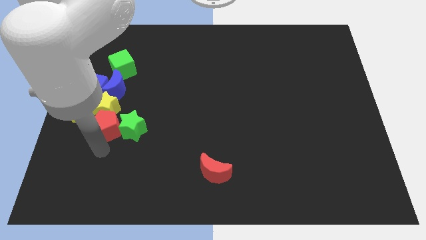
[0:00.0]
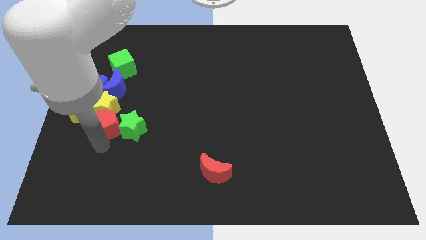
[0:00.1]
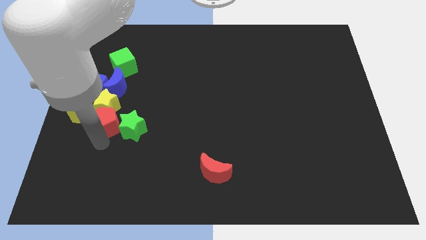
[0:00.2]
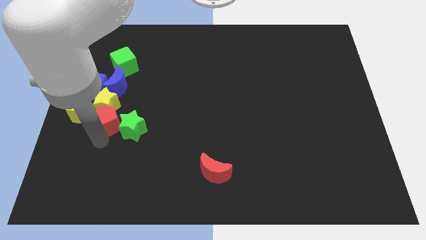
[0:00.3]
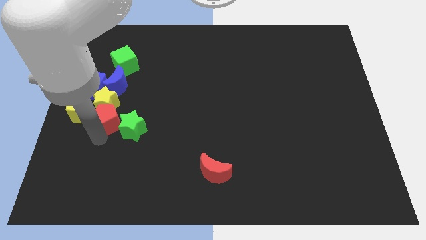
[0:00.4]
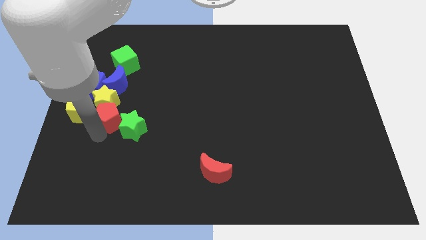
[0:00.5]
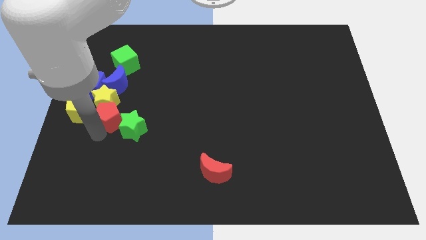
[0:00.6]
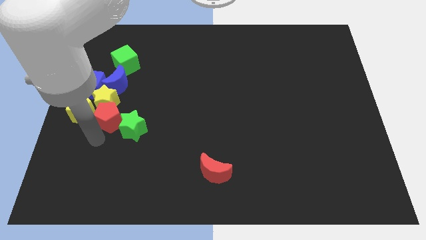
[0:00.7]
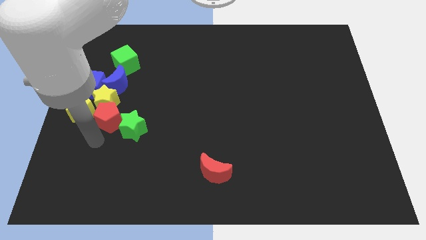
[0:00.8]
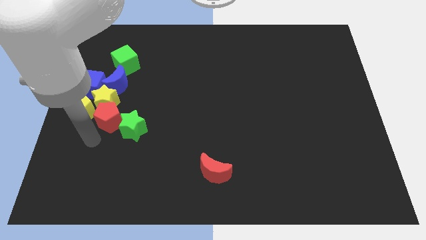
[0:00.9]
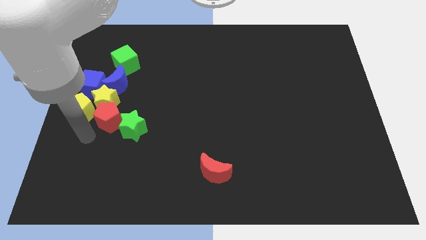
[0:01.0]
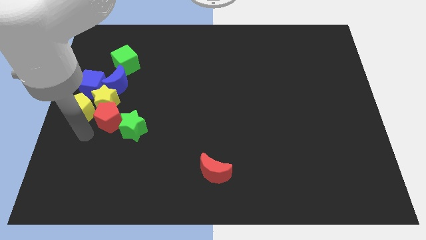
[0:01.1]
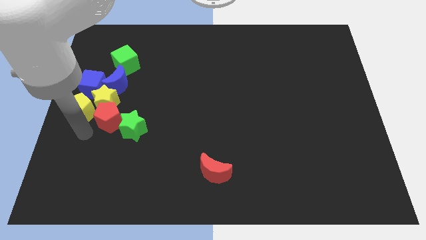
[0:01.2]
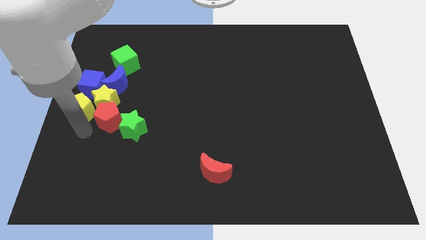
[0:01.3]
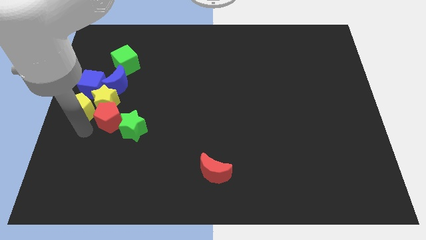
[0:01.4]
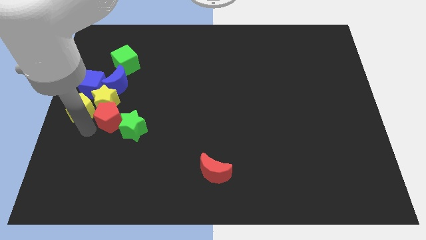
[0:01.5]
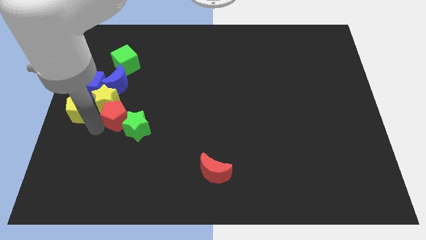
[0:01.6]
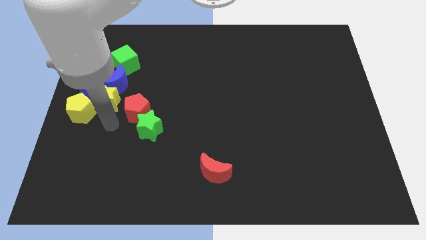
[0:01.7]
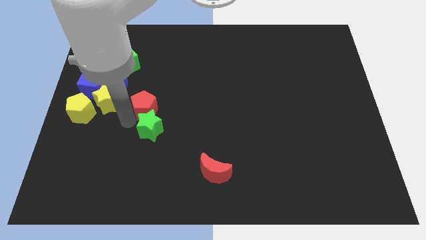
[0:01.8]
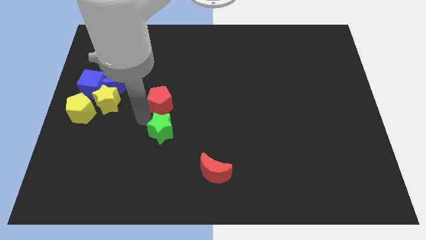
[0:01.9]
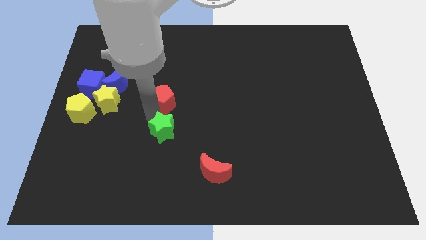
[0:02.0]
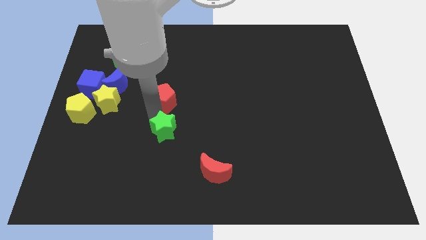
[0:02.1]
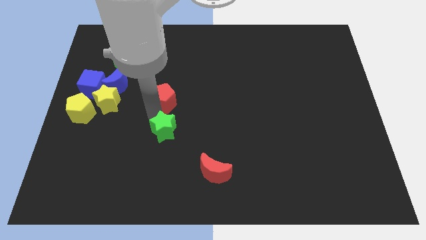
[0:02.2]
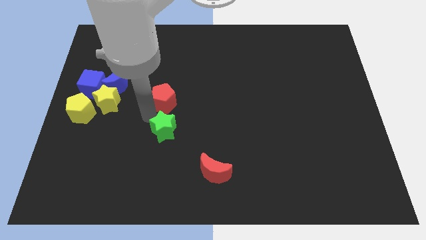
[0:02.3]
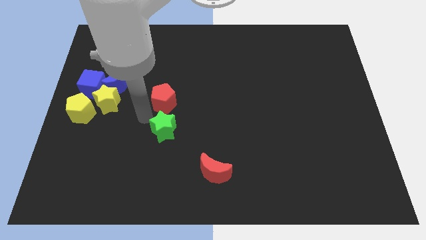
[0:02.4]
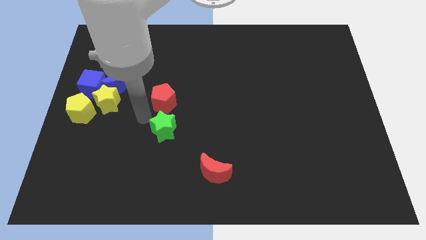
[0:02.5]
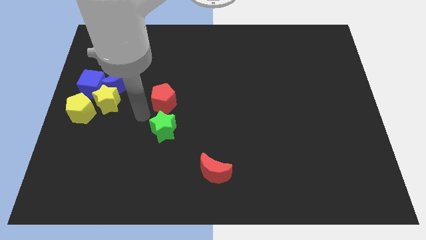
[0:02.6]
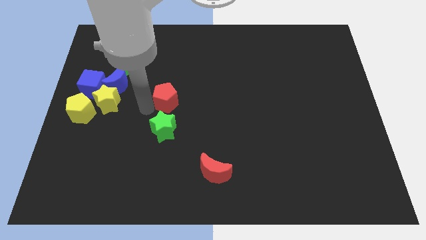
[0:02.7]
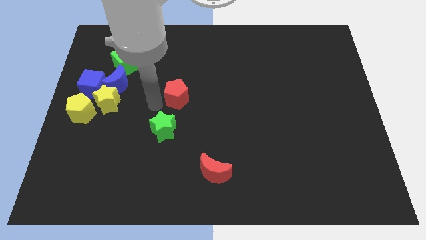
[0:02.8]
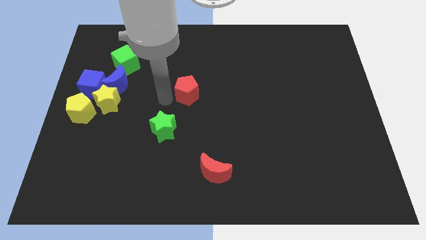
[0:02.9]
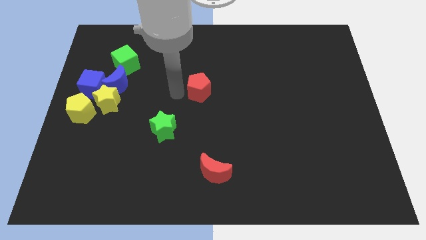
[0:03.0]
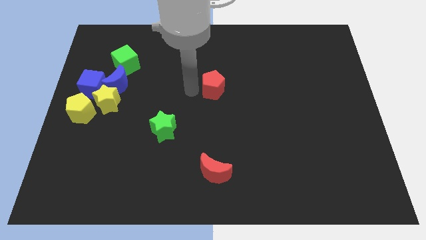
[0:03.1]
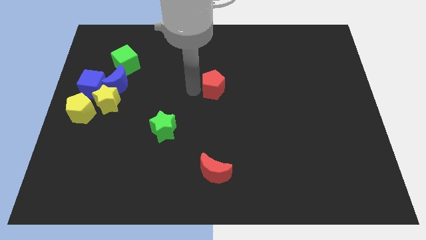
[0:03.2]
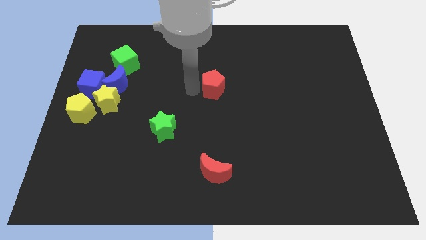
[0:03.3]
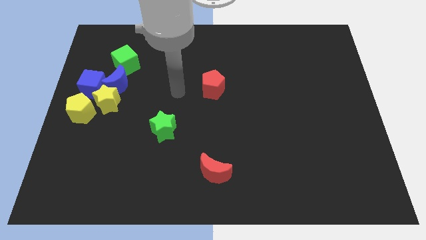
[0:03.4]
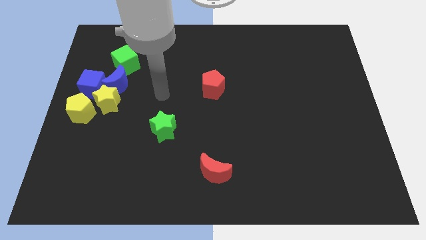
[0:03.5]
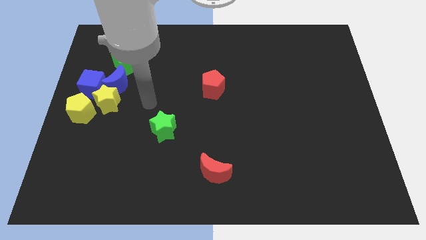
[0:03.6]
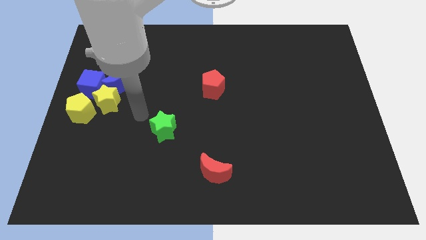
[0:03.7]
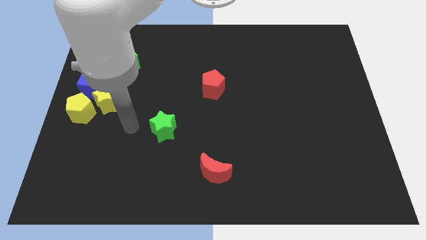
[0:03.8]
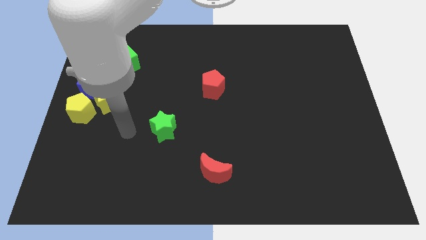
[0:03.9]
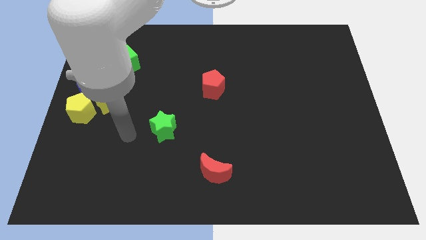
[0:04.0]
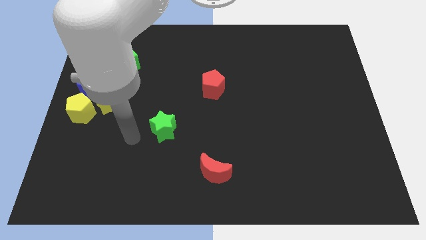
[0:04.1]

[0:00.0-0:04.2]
slide the red pentagon to the center of the board

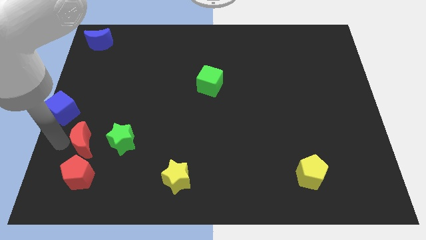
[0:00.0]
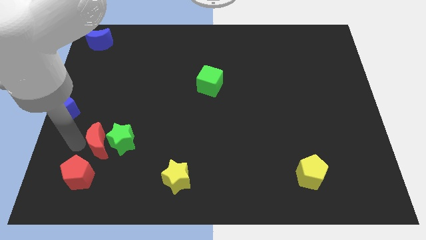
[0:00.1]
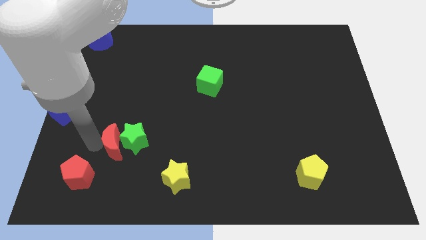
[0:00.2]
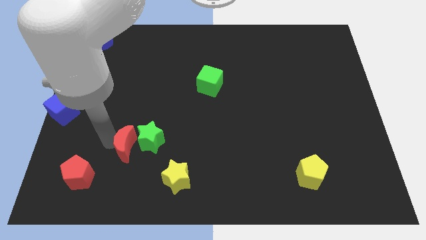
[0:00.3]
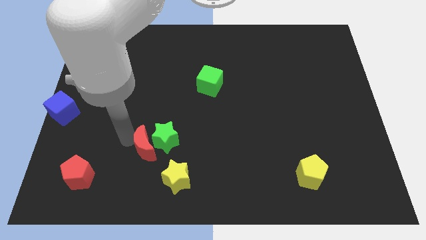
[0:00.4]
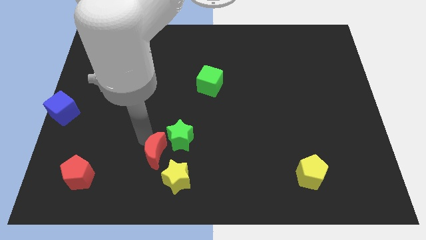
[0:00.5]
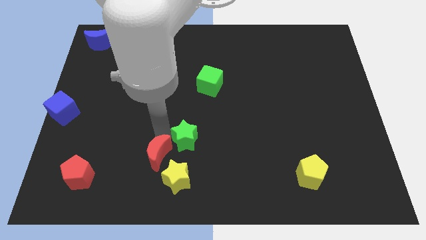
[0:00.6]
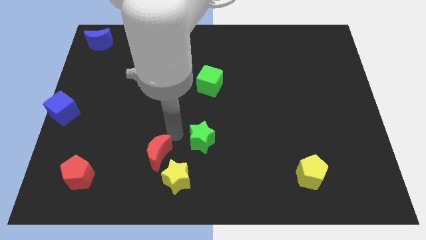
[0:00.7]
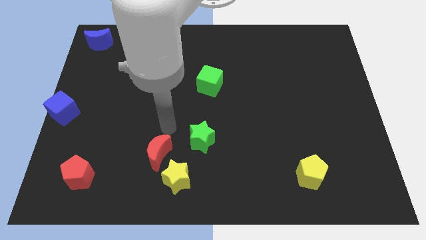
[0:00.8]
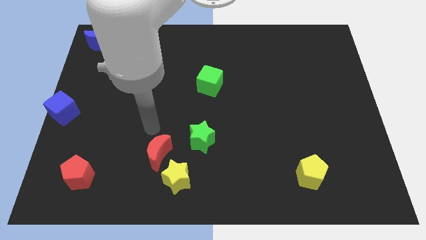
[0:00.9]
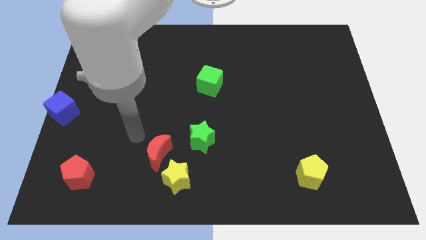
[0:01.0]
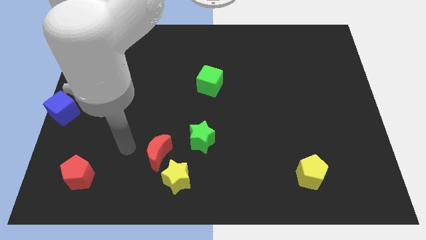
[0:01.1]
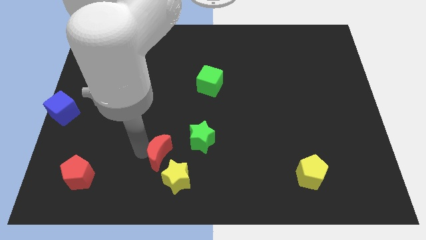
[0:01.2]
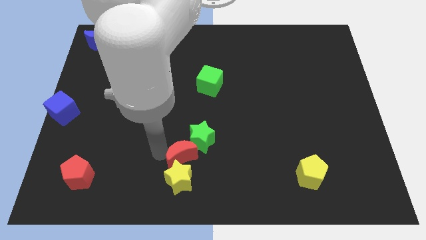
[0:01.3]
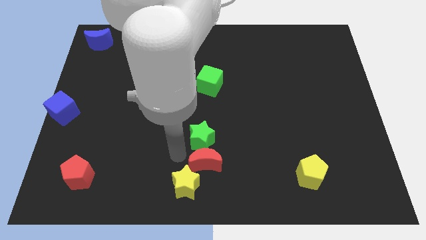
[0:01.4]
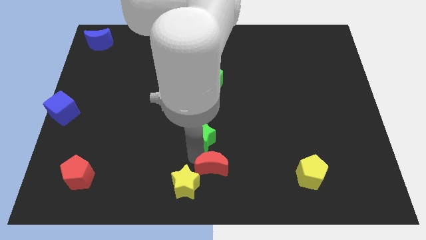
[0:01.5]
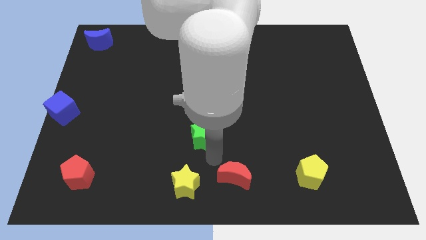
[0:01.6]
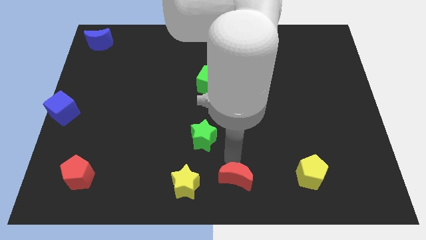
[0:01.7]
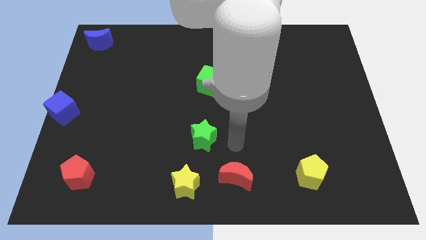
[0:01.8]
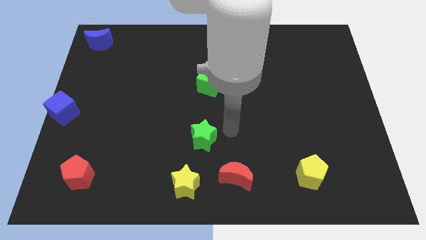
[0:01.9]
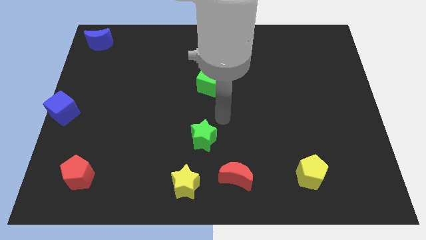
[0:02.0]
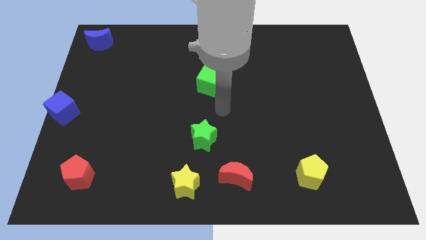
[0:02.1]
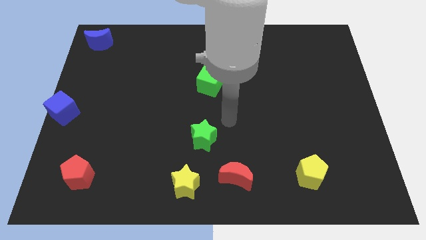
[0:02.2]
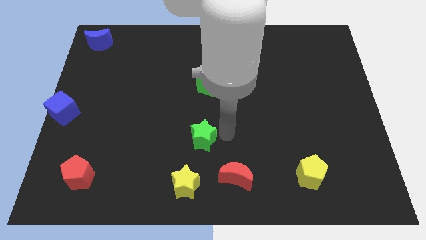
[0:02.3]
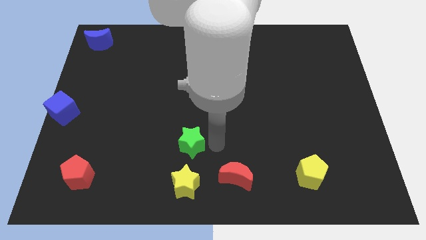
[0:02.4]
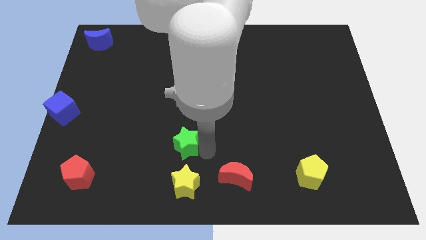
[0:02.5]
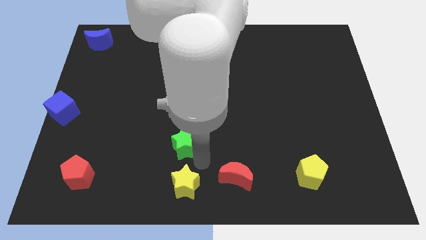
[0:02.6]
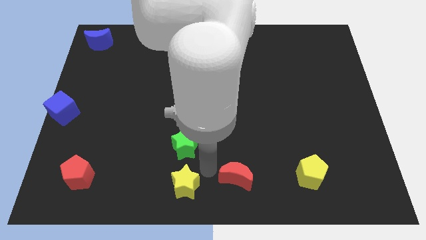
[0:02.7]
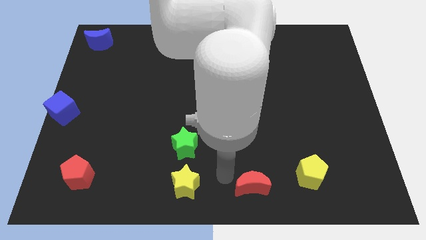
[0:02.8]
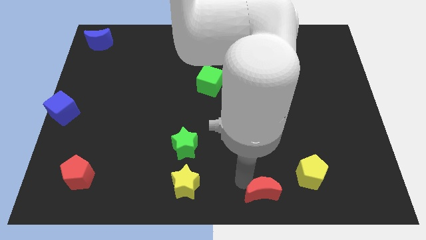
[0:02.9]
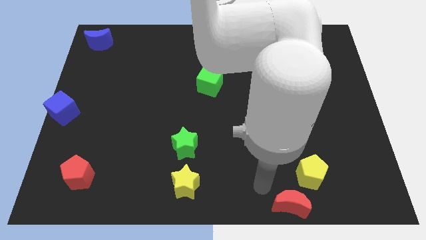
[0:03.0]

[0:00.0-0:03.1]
slide red moon to bottom left of yellow pentagon

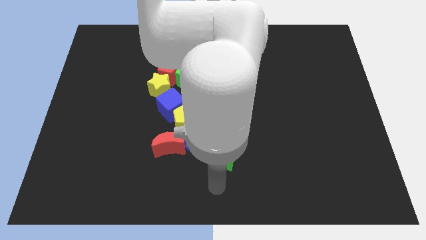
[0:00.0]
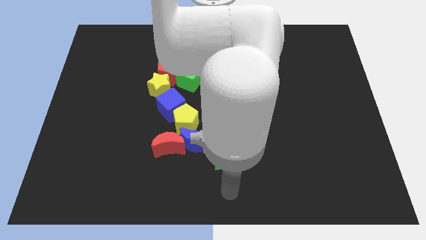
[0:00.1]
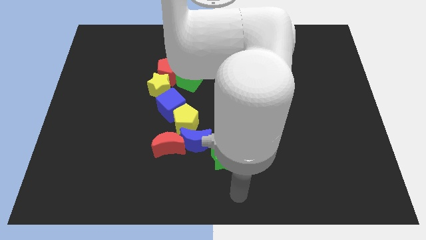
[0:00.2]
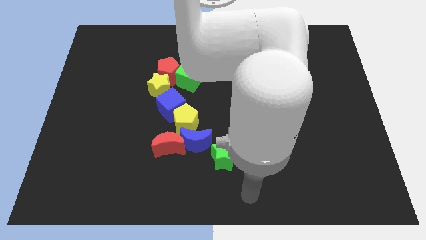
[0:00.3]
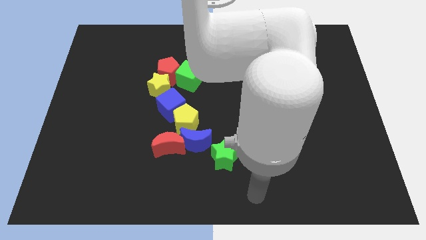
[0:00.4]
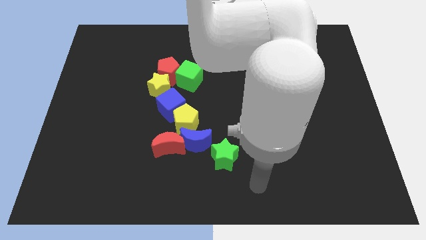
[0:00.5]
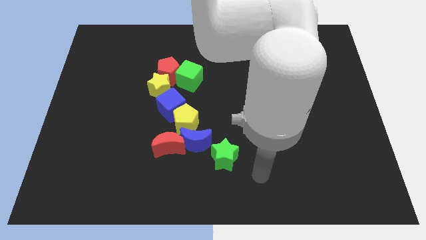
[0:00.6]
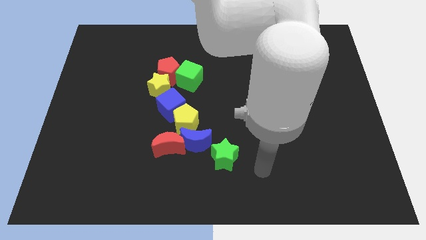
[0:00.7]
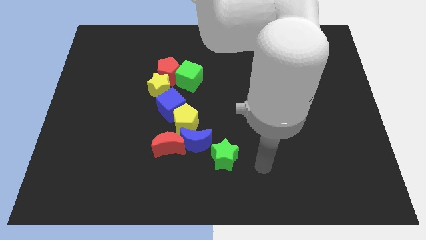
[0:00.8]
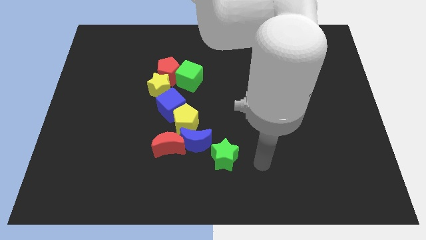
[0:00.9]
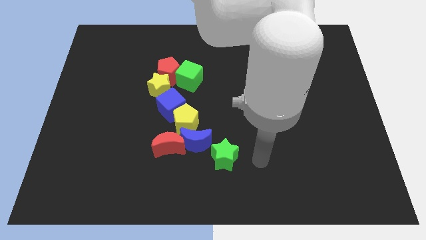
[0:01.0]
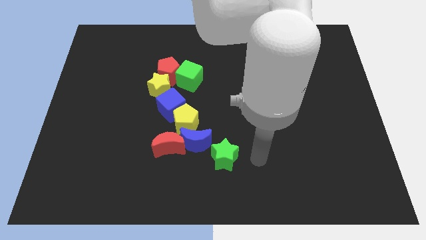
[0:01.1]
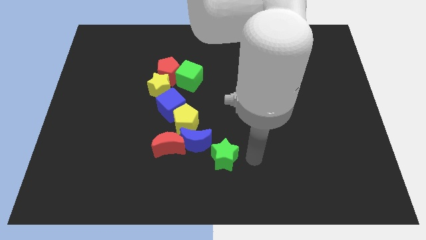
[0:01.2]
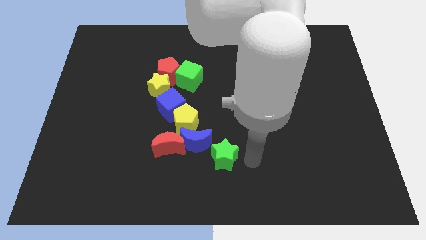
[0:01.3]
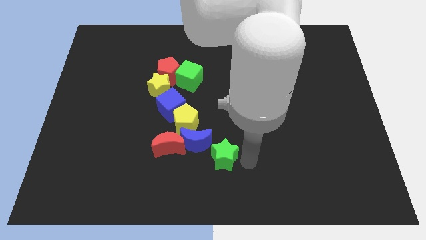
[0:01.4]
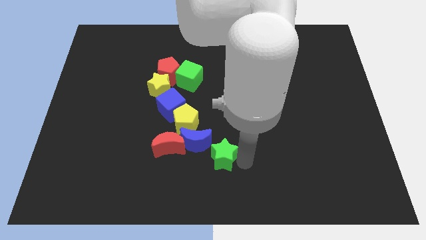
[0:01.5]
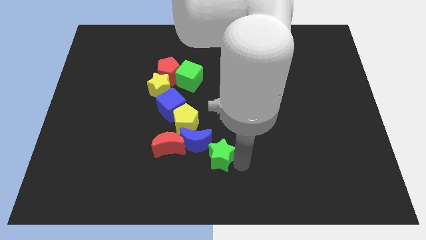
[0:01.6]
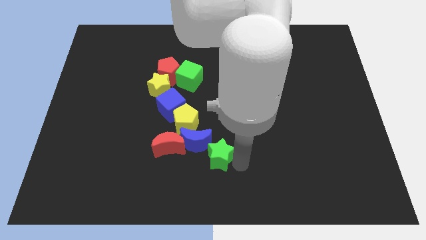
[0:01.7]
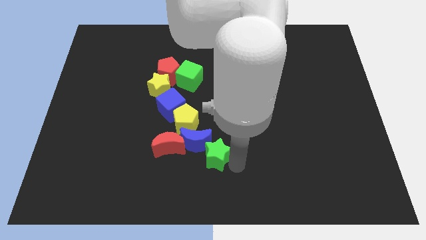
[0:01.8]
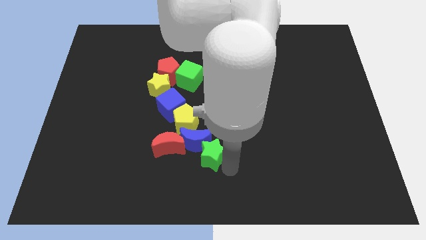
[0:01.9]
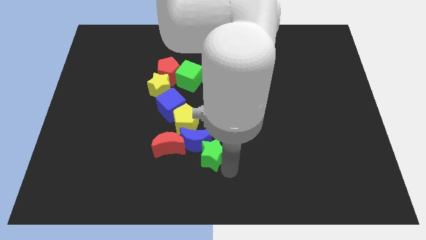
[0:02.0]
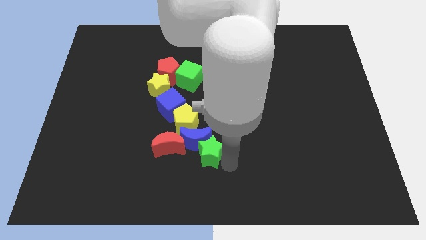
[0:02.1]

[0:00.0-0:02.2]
push the green star into the blue moon
